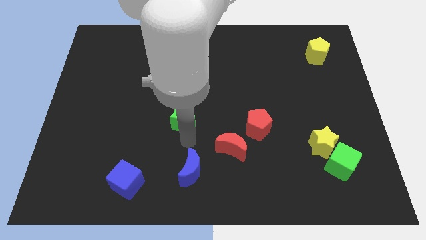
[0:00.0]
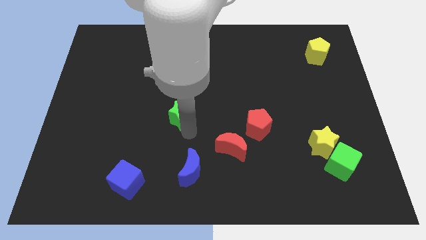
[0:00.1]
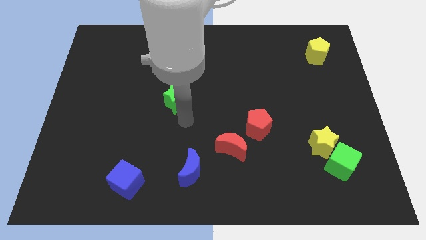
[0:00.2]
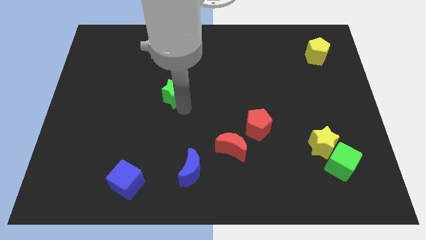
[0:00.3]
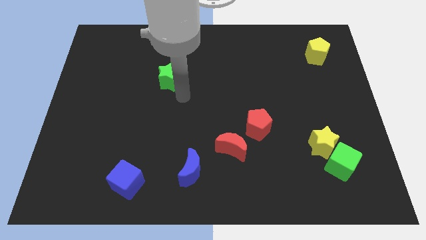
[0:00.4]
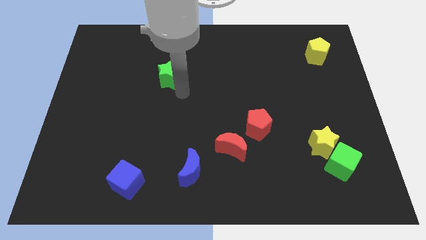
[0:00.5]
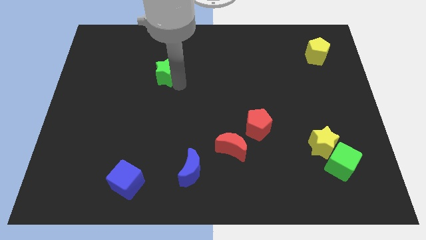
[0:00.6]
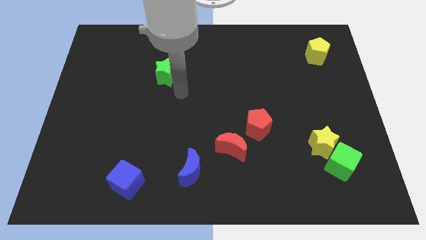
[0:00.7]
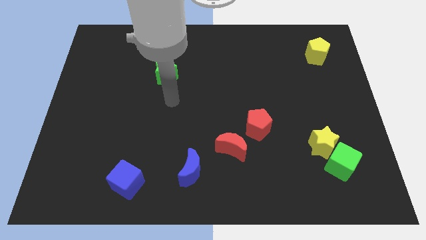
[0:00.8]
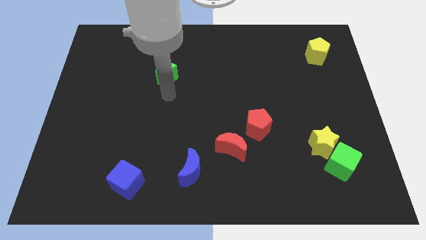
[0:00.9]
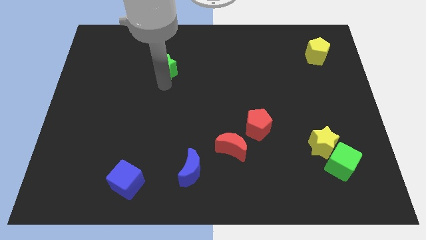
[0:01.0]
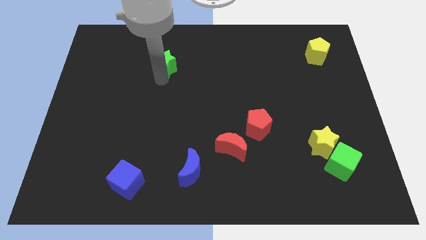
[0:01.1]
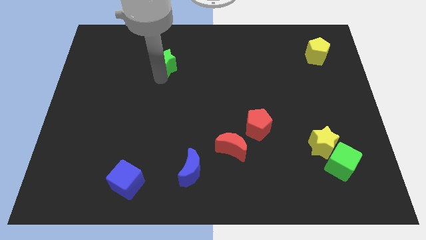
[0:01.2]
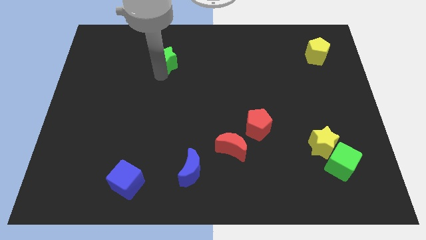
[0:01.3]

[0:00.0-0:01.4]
move the green star diagonally top left to the red pentagon

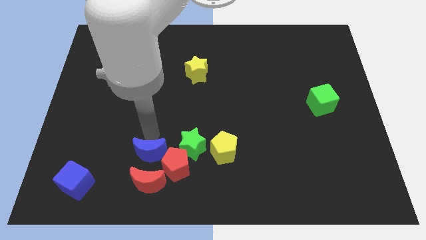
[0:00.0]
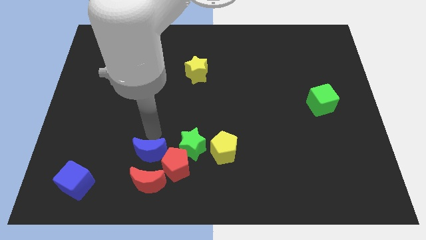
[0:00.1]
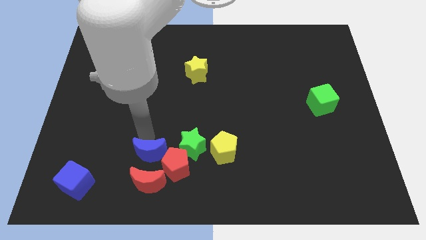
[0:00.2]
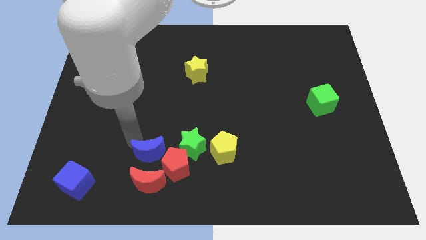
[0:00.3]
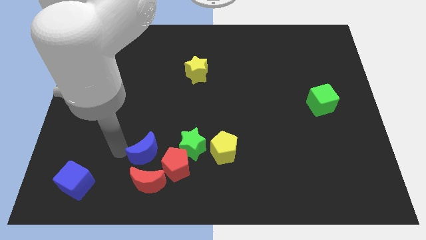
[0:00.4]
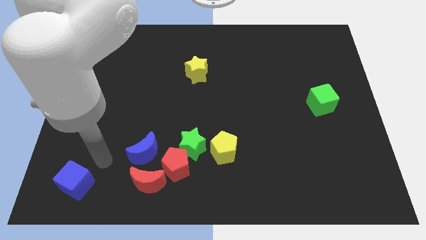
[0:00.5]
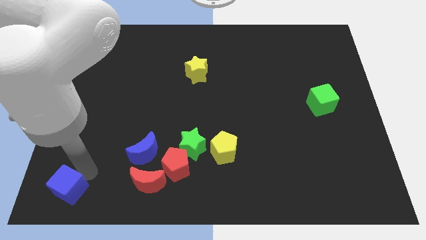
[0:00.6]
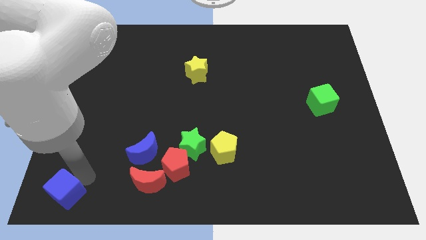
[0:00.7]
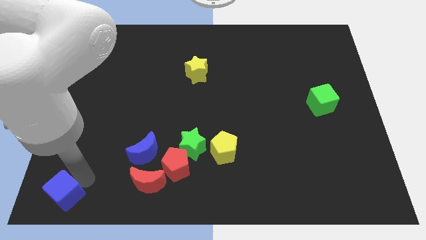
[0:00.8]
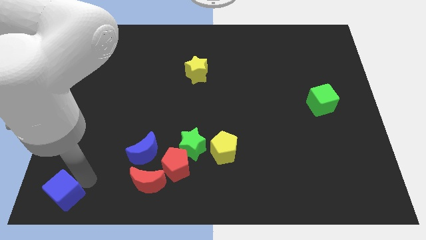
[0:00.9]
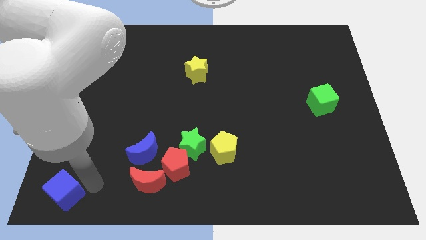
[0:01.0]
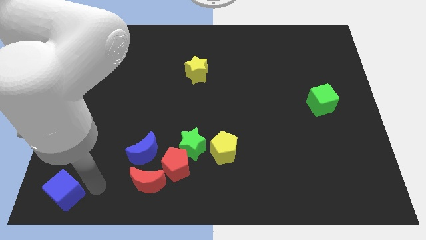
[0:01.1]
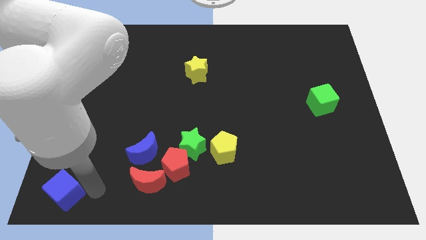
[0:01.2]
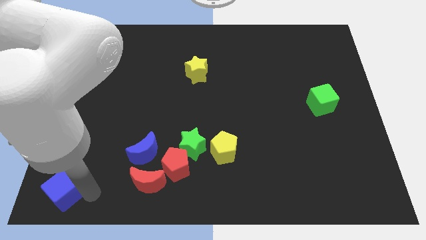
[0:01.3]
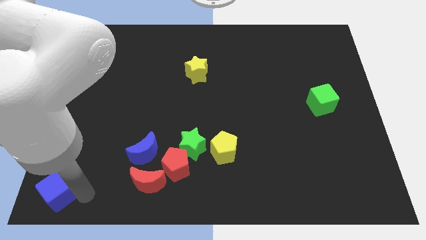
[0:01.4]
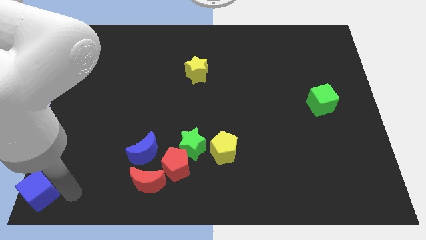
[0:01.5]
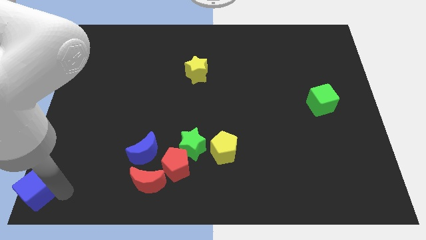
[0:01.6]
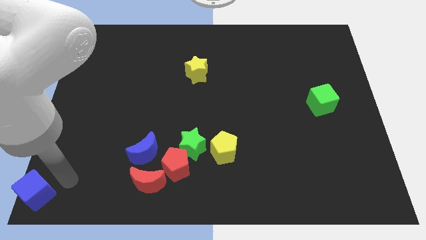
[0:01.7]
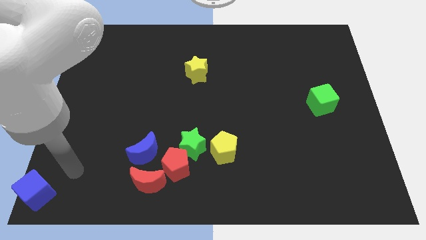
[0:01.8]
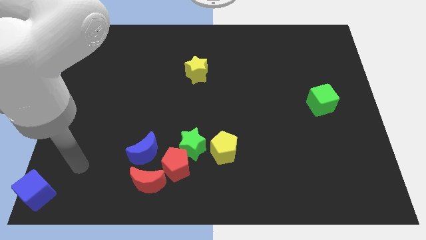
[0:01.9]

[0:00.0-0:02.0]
drag the blue cube to the bottom left corner

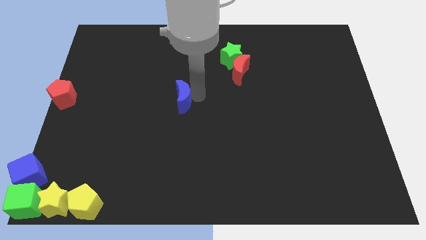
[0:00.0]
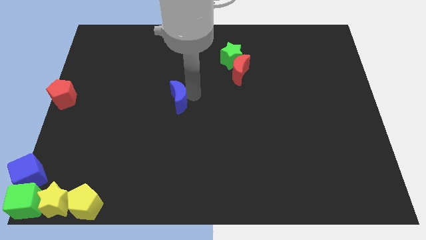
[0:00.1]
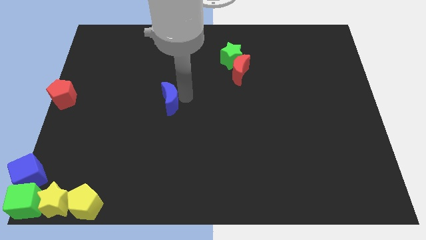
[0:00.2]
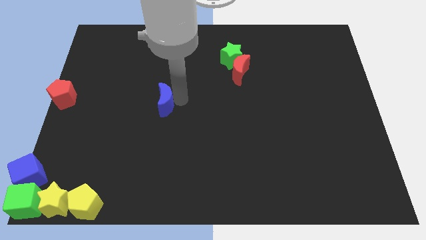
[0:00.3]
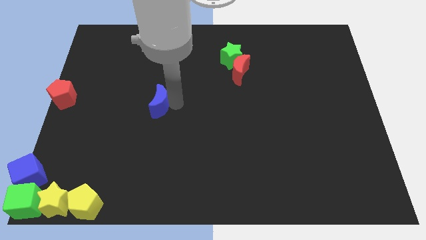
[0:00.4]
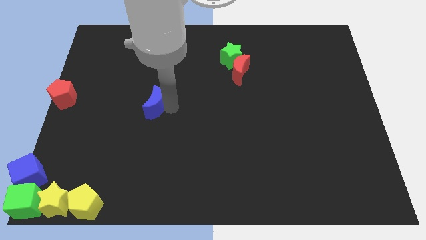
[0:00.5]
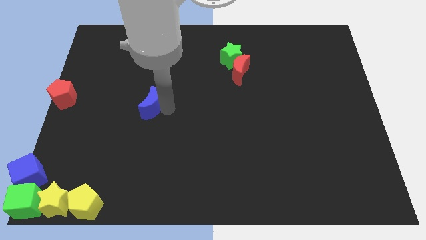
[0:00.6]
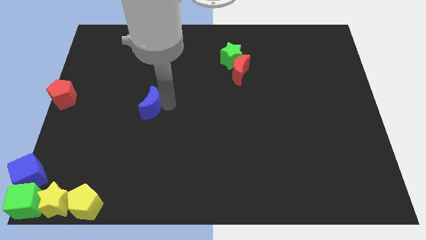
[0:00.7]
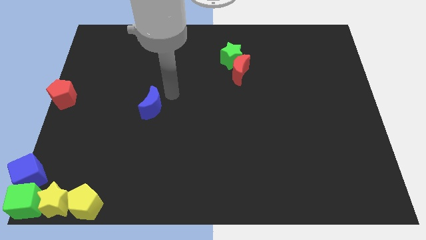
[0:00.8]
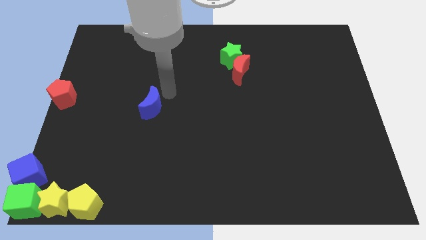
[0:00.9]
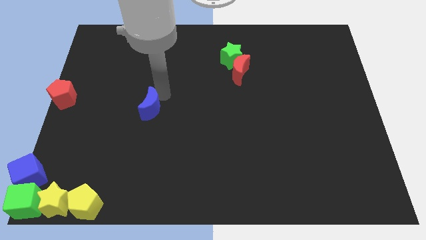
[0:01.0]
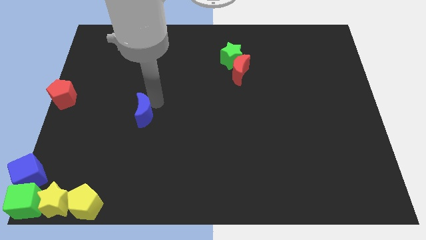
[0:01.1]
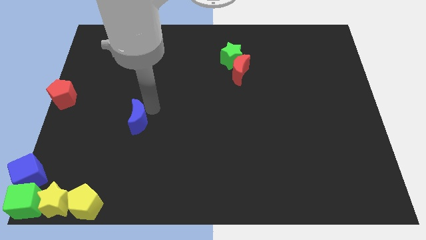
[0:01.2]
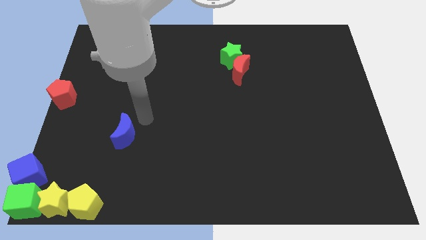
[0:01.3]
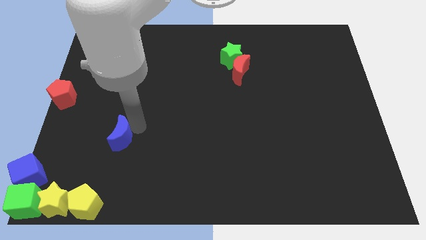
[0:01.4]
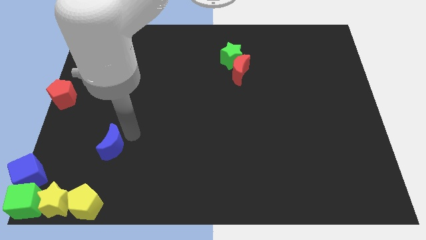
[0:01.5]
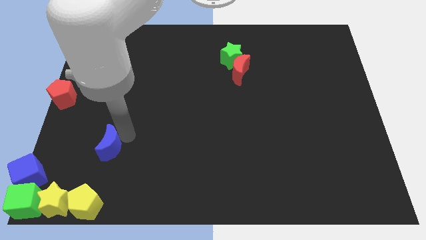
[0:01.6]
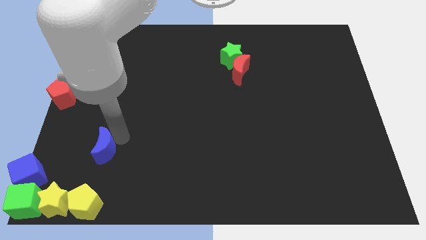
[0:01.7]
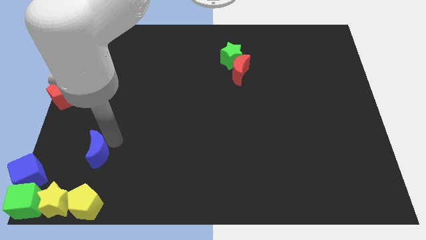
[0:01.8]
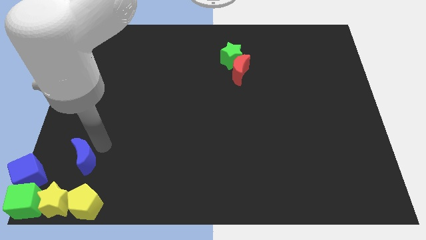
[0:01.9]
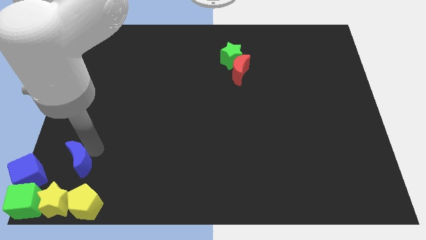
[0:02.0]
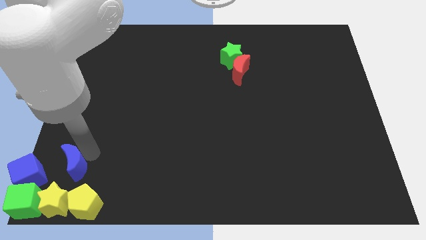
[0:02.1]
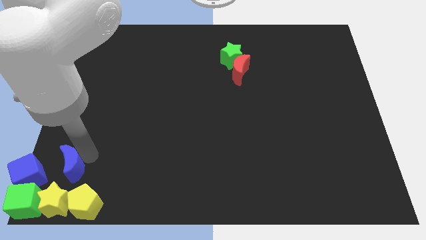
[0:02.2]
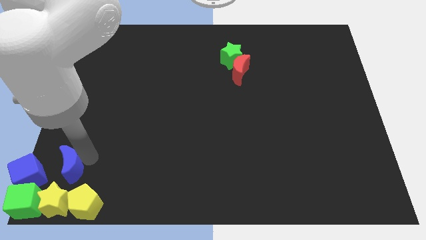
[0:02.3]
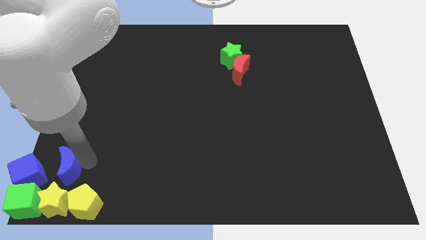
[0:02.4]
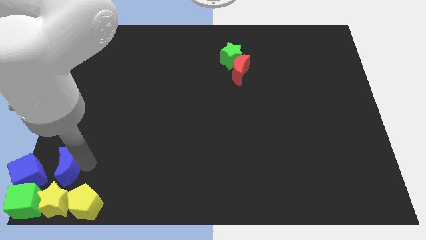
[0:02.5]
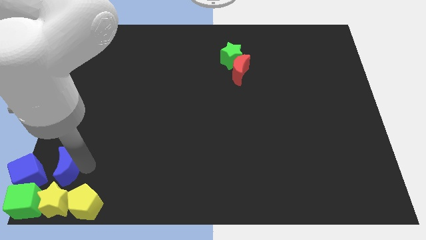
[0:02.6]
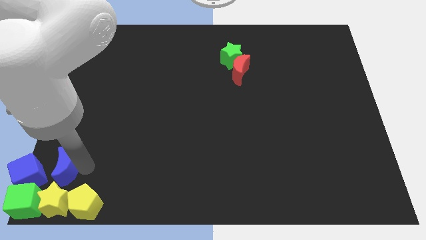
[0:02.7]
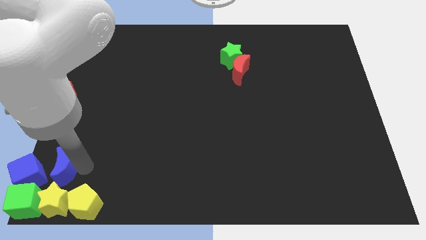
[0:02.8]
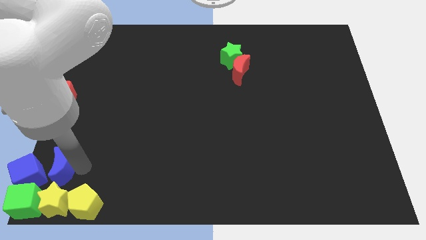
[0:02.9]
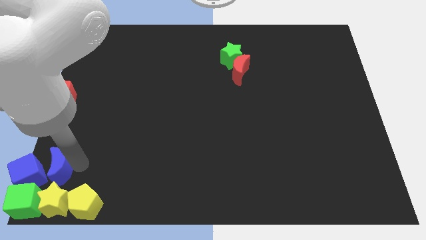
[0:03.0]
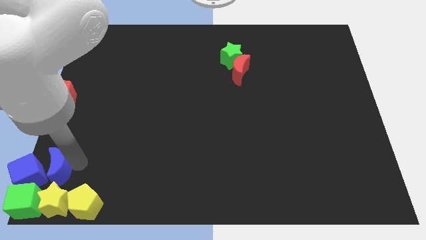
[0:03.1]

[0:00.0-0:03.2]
place the blue moon to the right side of blue cube

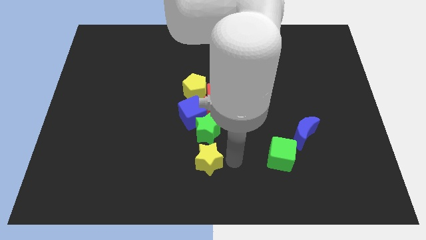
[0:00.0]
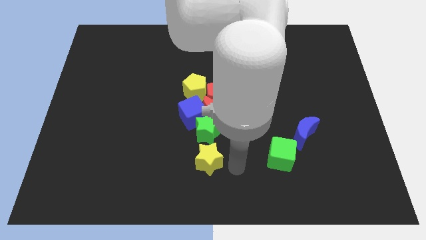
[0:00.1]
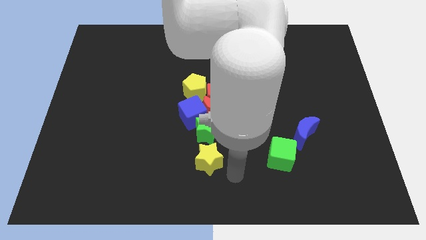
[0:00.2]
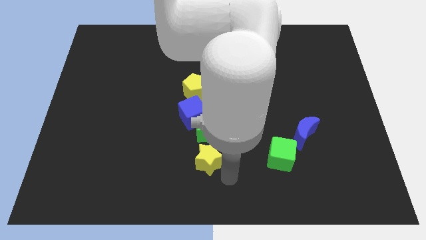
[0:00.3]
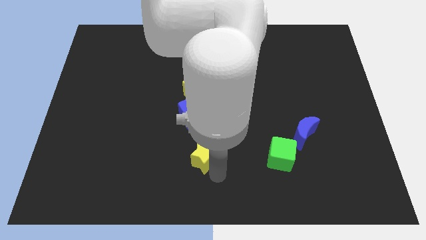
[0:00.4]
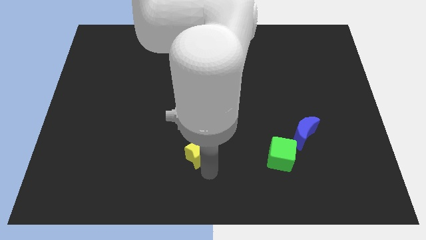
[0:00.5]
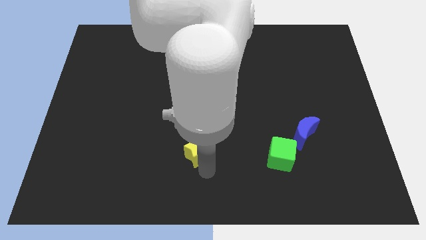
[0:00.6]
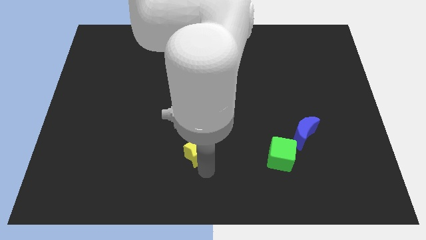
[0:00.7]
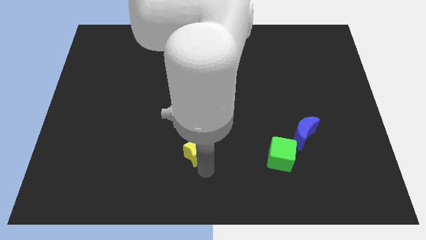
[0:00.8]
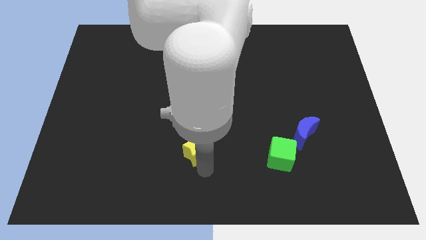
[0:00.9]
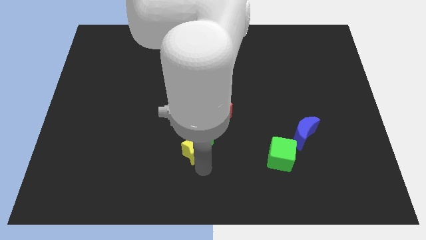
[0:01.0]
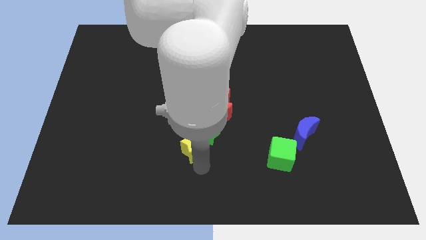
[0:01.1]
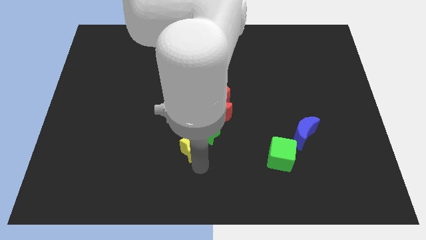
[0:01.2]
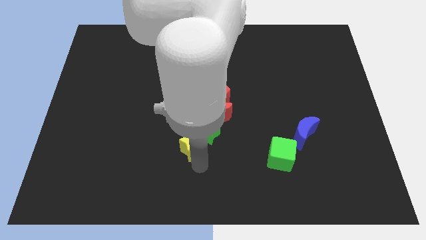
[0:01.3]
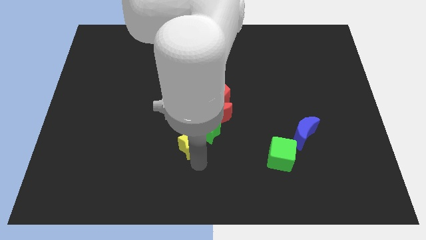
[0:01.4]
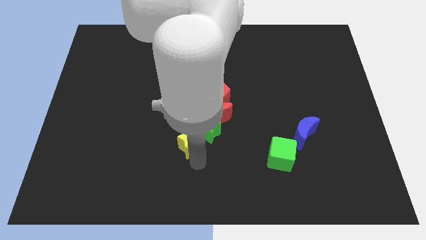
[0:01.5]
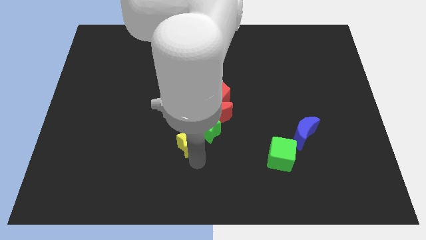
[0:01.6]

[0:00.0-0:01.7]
move yellow star slightly upwards

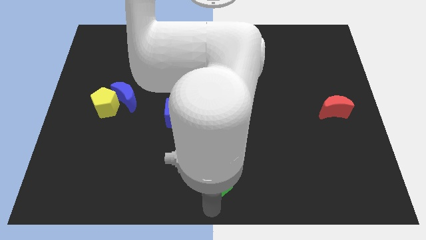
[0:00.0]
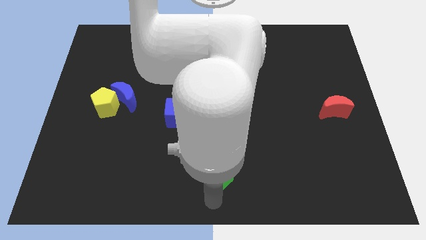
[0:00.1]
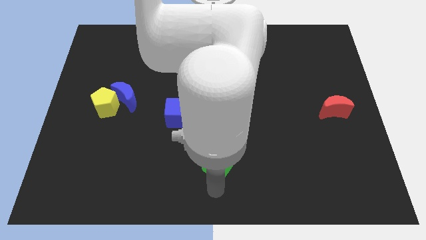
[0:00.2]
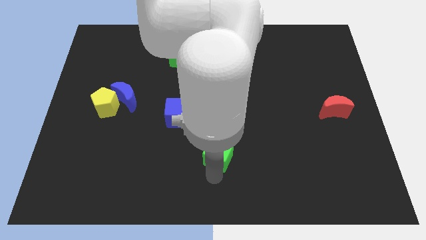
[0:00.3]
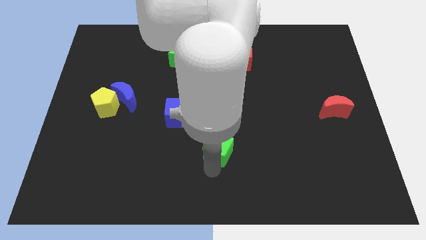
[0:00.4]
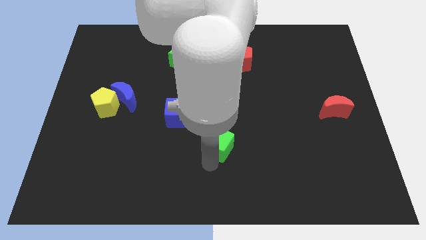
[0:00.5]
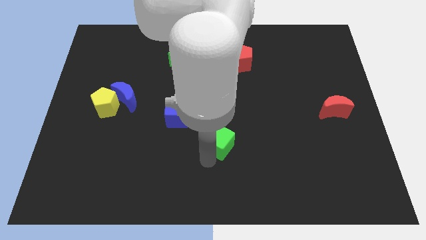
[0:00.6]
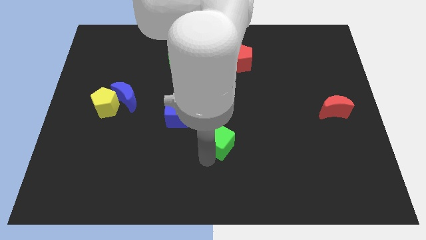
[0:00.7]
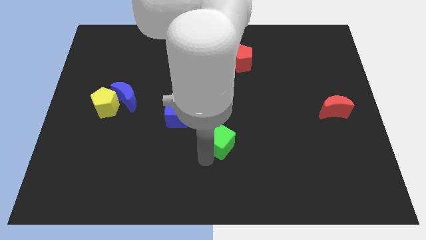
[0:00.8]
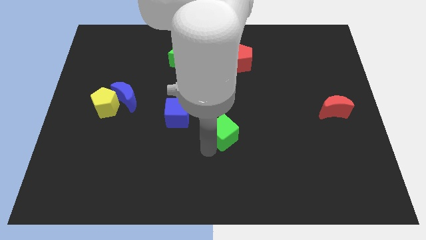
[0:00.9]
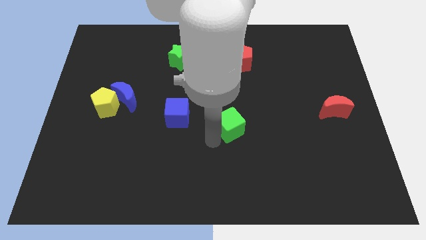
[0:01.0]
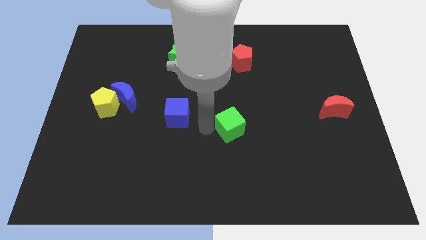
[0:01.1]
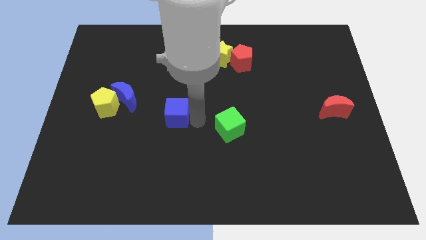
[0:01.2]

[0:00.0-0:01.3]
push the green cube towards the top
